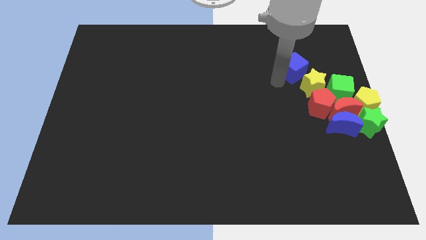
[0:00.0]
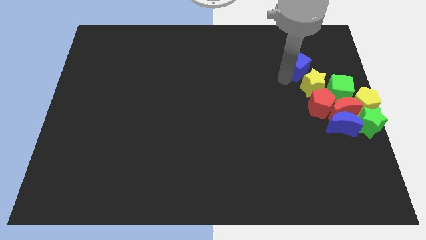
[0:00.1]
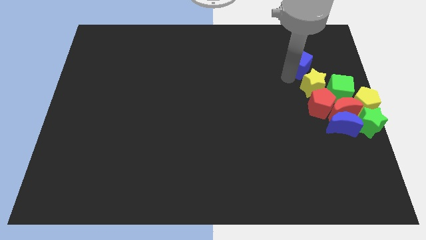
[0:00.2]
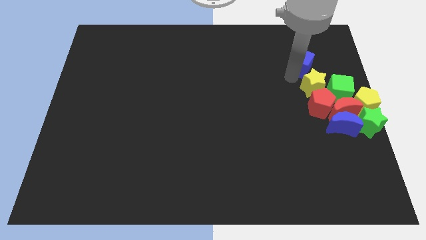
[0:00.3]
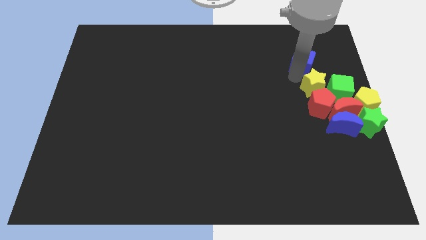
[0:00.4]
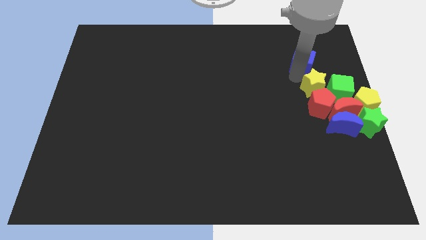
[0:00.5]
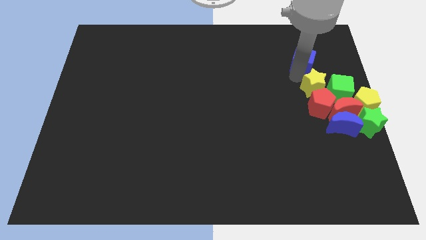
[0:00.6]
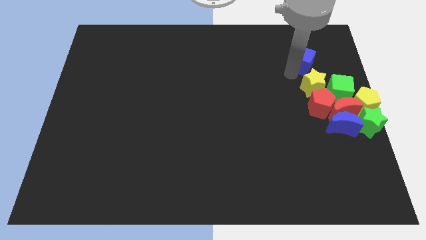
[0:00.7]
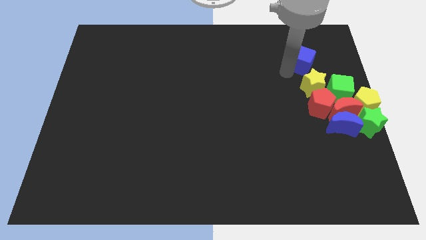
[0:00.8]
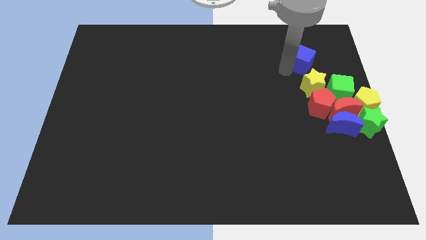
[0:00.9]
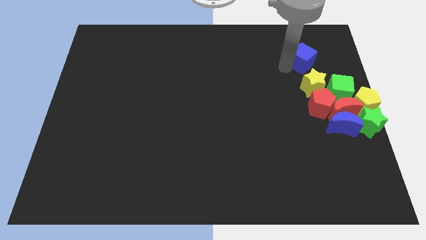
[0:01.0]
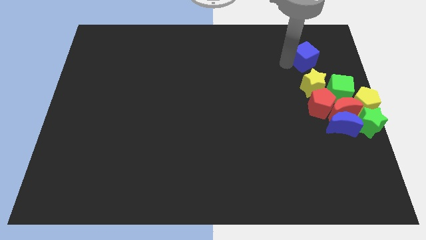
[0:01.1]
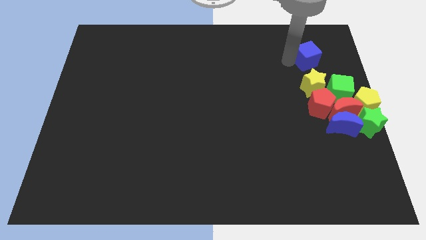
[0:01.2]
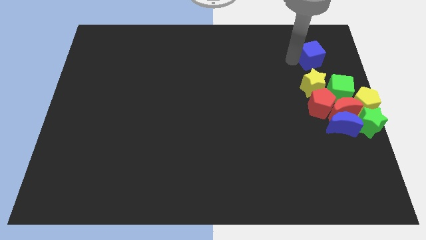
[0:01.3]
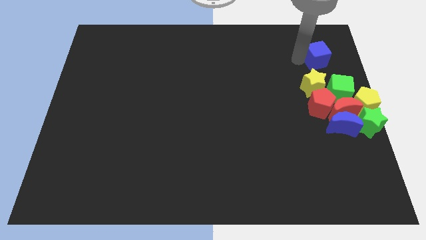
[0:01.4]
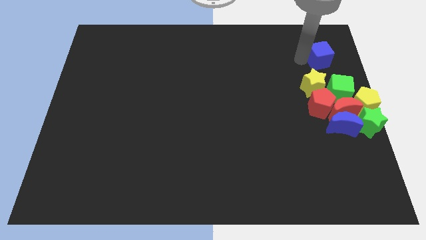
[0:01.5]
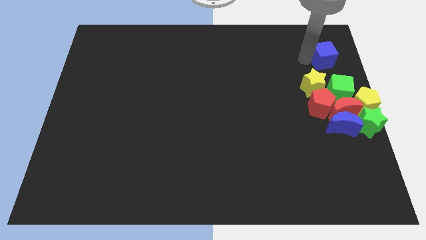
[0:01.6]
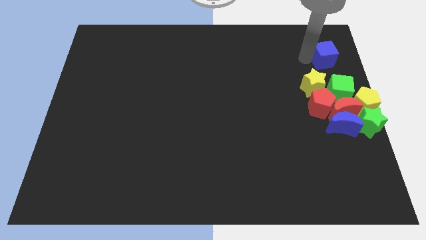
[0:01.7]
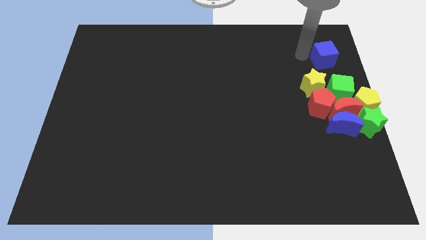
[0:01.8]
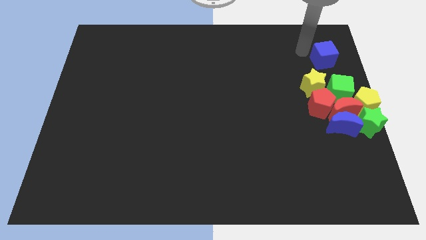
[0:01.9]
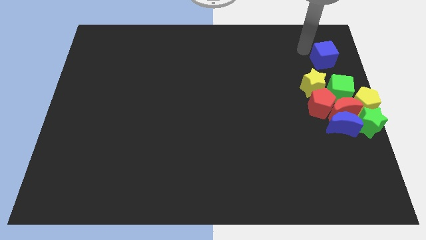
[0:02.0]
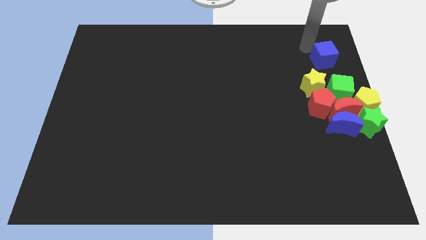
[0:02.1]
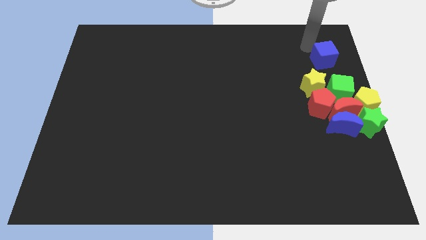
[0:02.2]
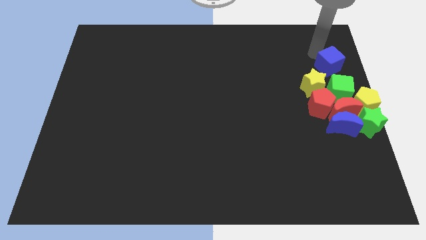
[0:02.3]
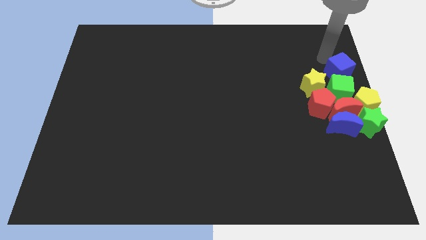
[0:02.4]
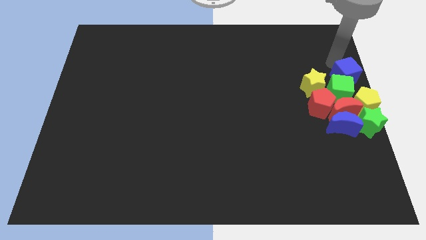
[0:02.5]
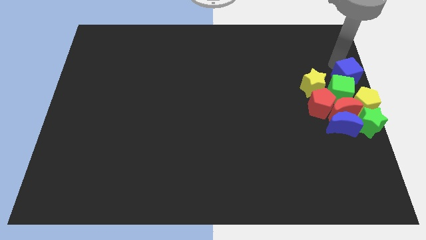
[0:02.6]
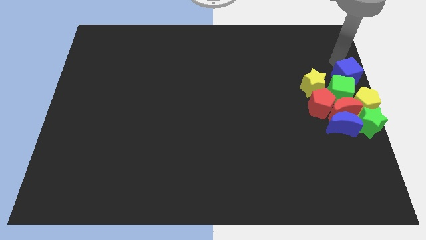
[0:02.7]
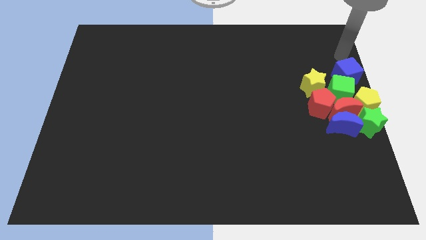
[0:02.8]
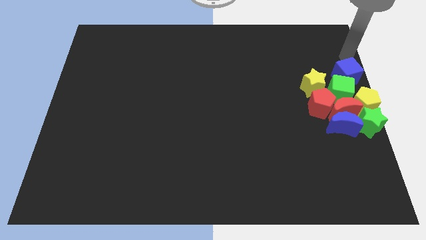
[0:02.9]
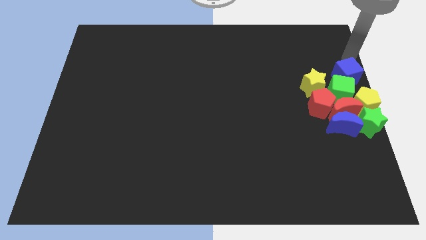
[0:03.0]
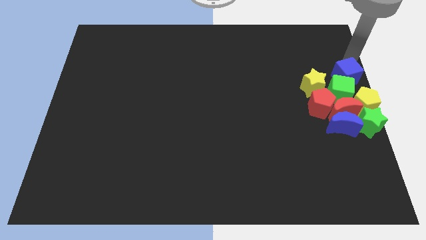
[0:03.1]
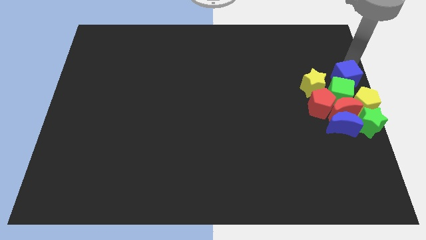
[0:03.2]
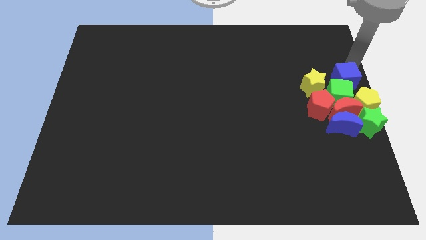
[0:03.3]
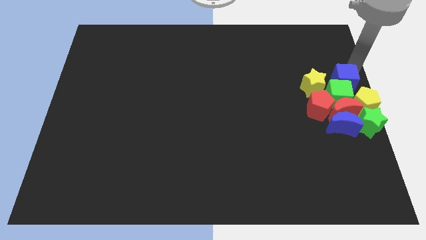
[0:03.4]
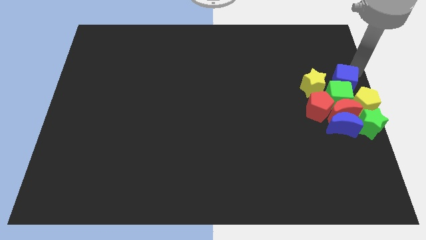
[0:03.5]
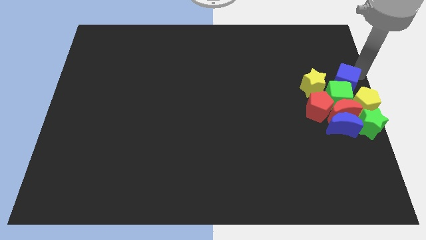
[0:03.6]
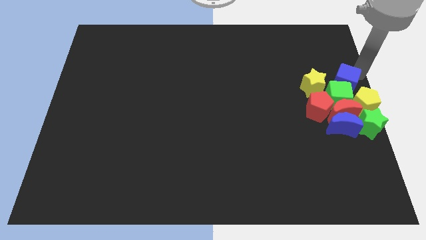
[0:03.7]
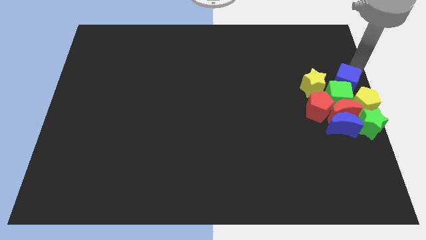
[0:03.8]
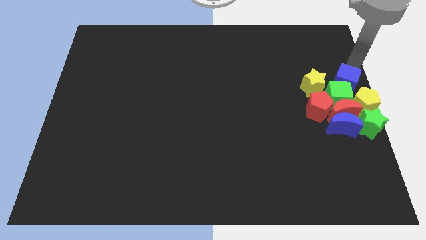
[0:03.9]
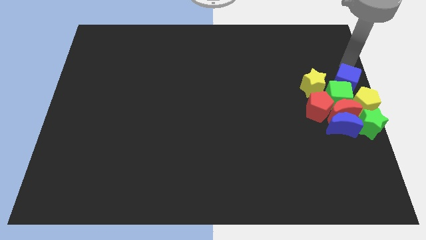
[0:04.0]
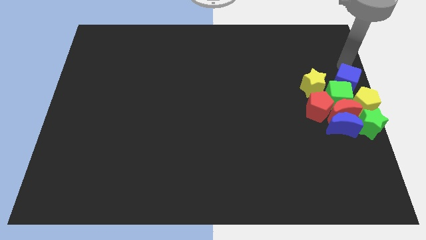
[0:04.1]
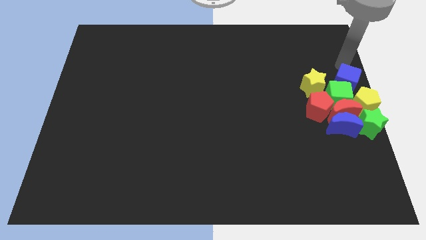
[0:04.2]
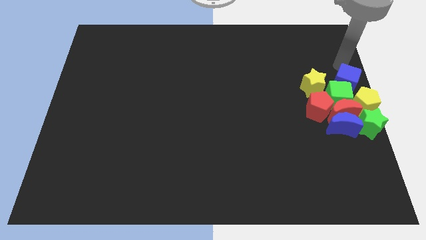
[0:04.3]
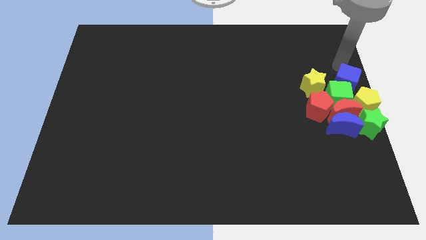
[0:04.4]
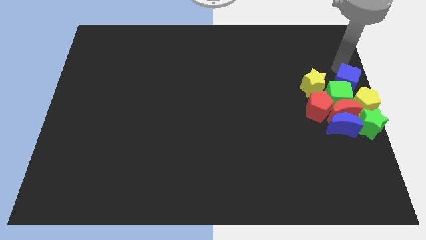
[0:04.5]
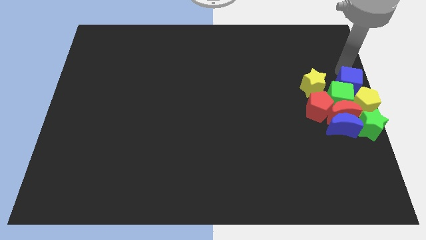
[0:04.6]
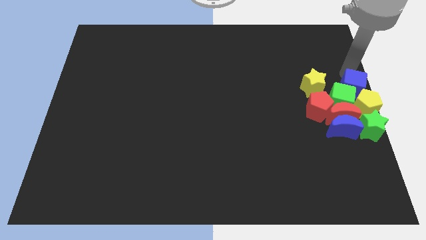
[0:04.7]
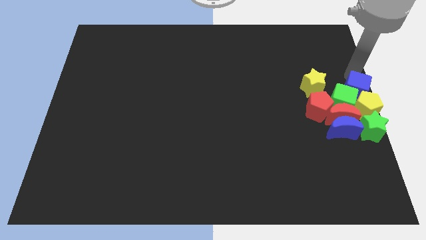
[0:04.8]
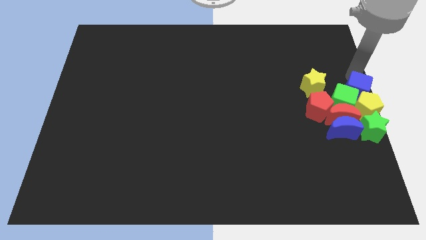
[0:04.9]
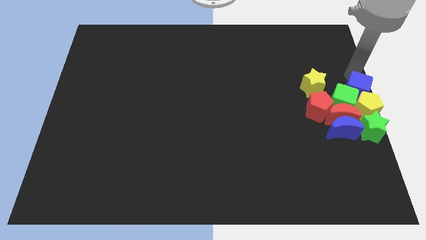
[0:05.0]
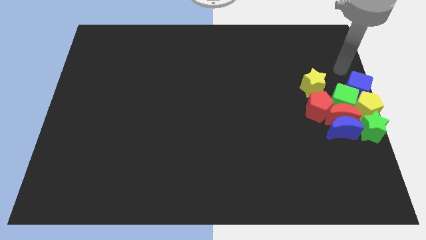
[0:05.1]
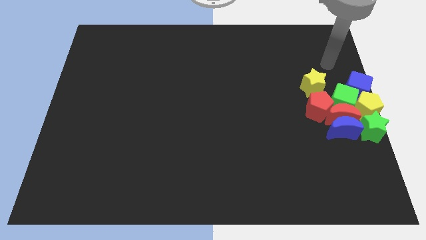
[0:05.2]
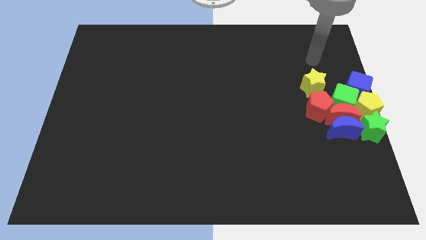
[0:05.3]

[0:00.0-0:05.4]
push the blue cube into the green cube

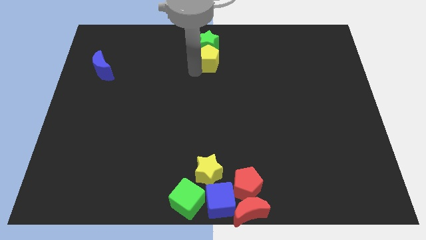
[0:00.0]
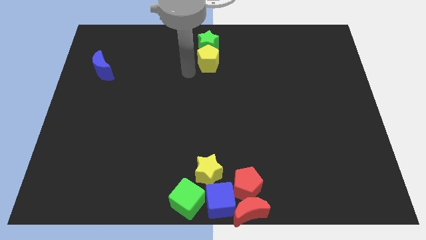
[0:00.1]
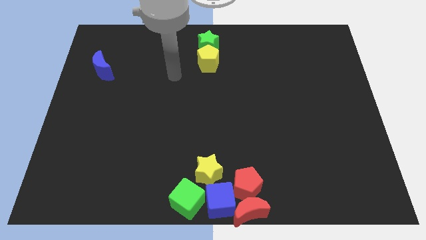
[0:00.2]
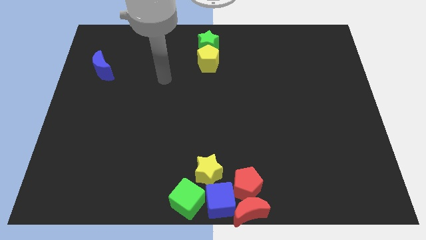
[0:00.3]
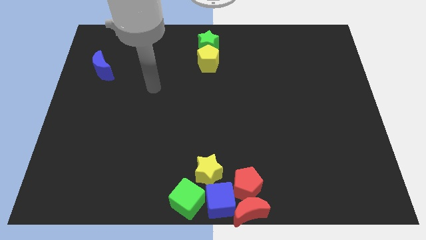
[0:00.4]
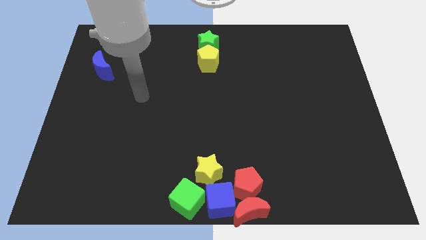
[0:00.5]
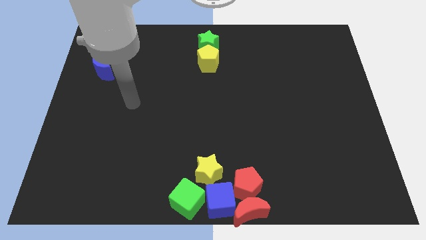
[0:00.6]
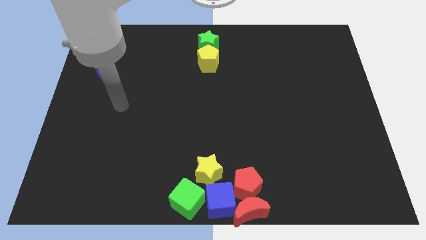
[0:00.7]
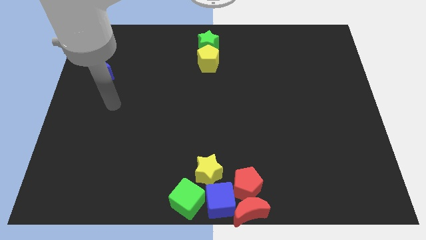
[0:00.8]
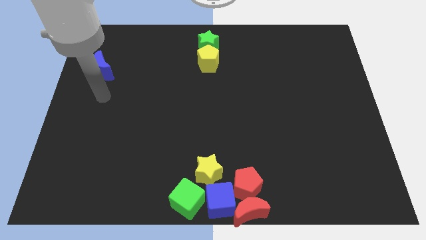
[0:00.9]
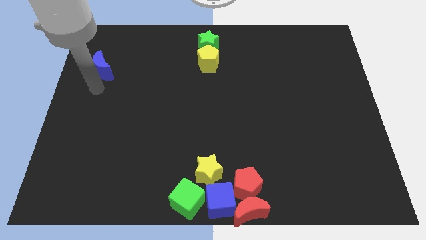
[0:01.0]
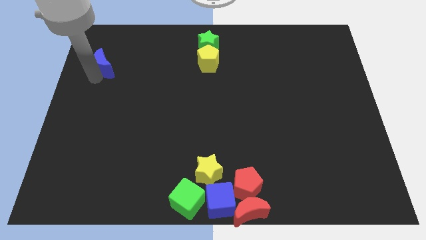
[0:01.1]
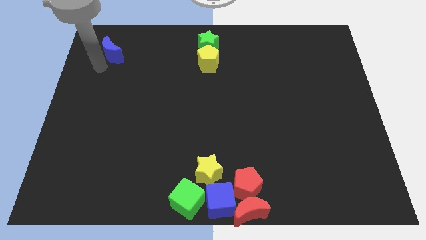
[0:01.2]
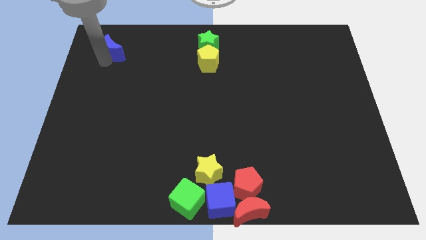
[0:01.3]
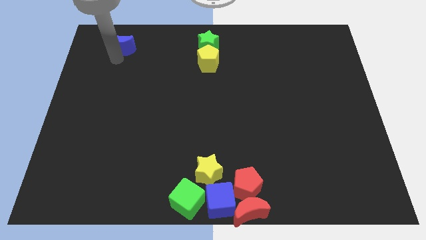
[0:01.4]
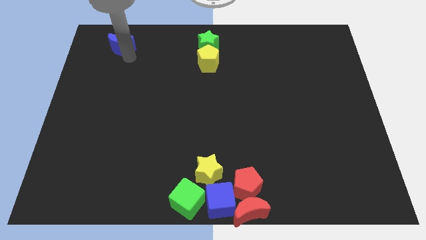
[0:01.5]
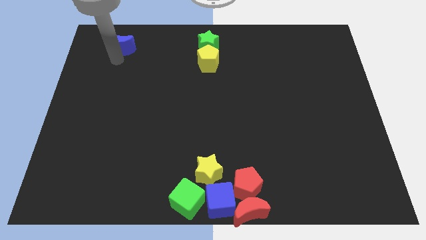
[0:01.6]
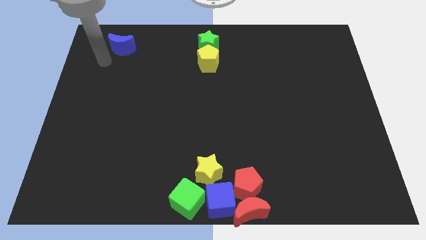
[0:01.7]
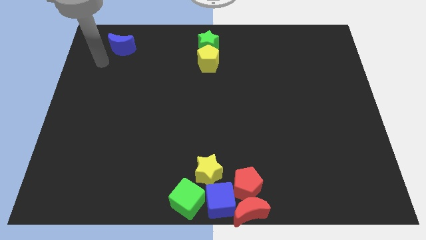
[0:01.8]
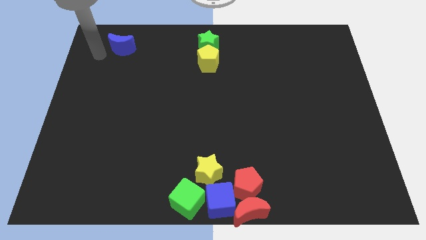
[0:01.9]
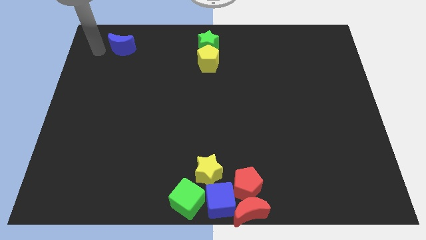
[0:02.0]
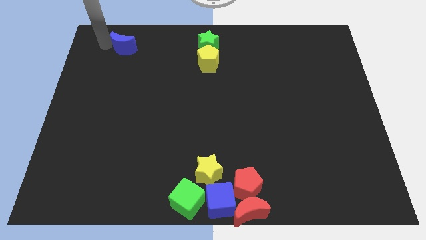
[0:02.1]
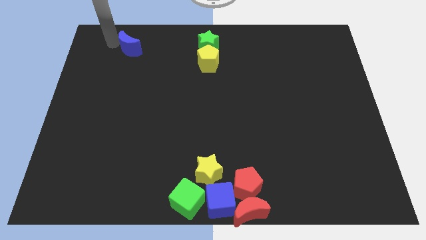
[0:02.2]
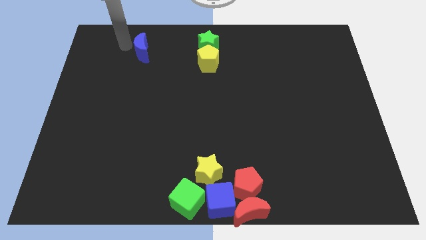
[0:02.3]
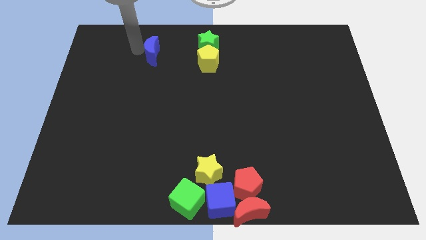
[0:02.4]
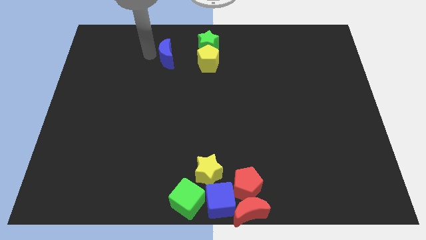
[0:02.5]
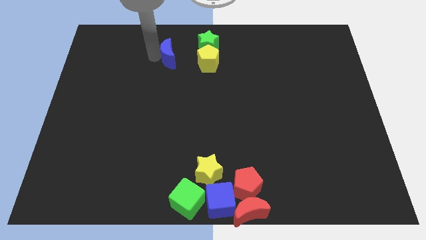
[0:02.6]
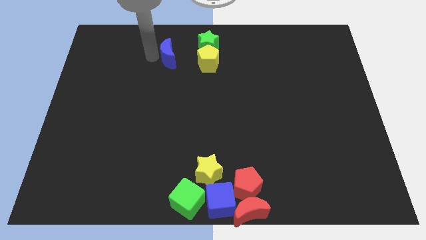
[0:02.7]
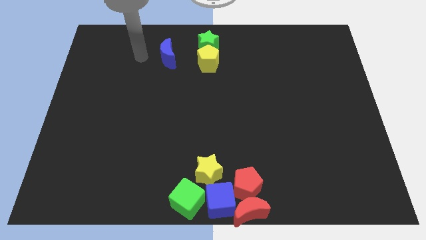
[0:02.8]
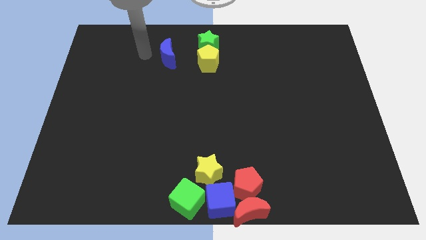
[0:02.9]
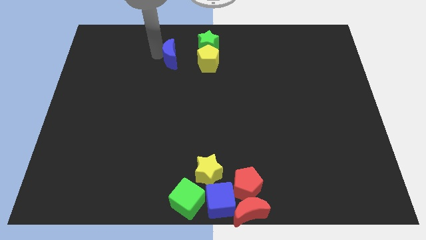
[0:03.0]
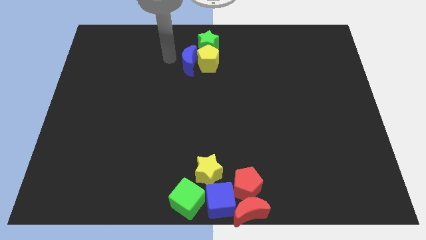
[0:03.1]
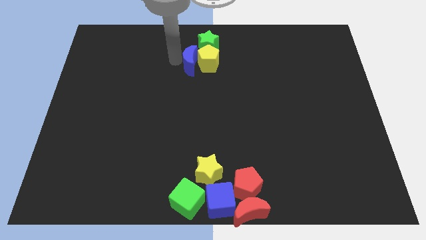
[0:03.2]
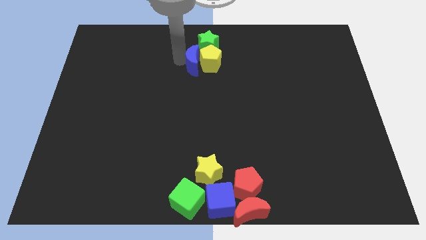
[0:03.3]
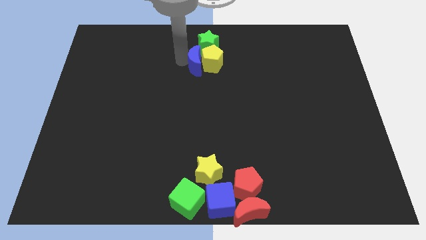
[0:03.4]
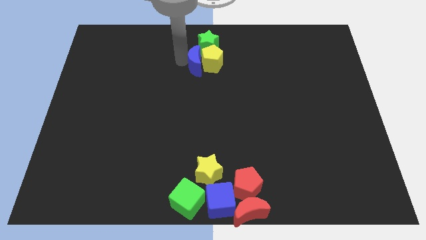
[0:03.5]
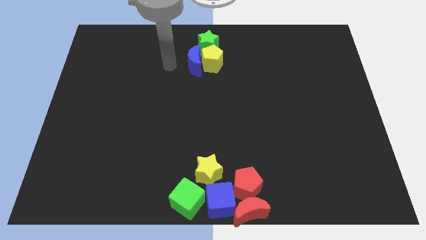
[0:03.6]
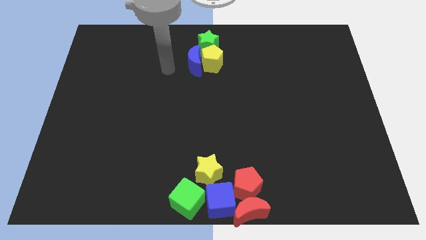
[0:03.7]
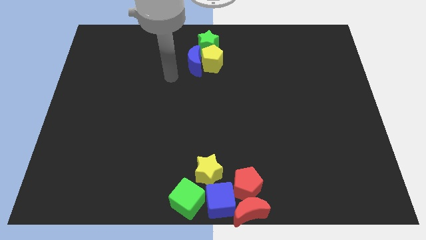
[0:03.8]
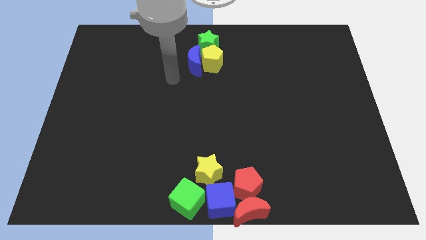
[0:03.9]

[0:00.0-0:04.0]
move the blue crescent to the left of the yellow pentagon
